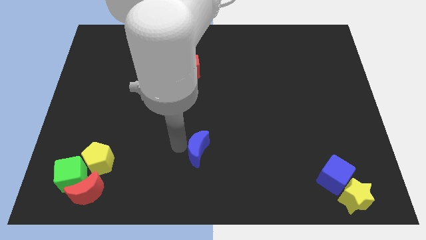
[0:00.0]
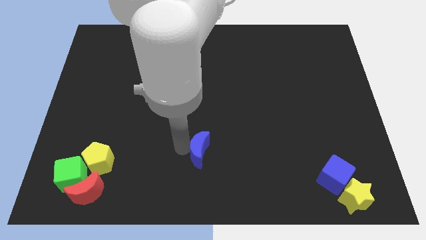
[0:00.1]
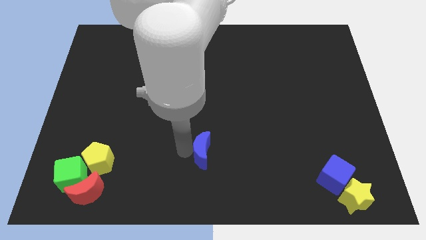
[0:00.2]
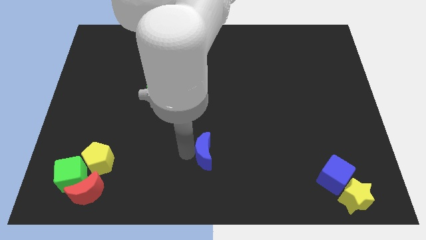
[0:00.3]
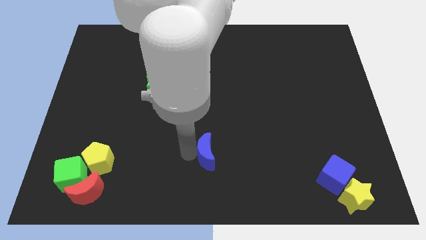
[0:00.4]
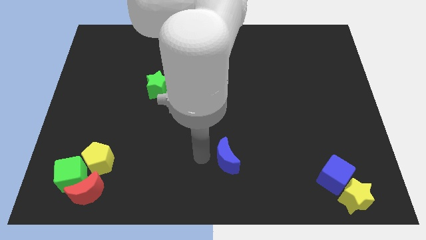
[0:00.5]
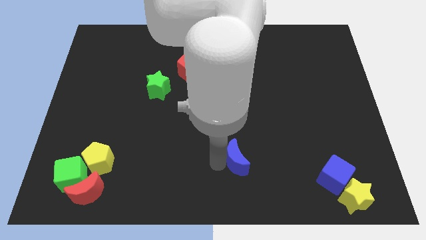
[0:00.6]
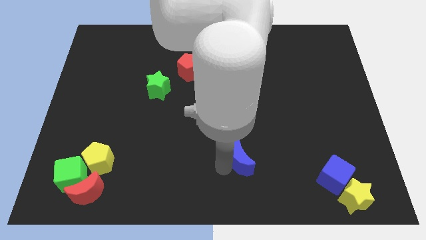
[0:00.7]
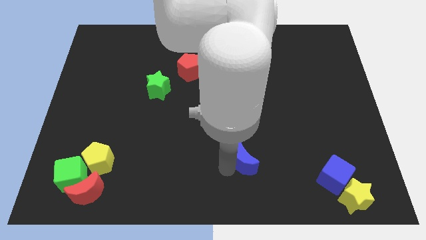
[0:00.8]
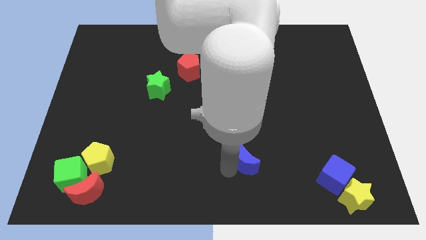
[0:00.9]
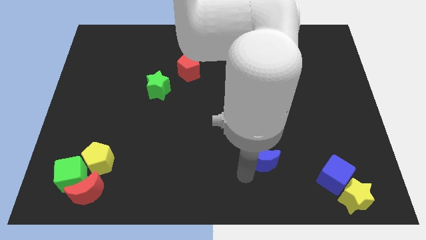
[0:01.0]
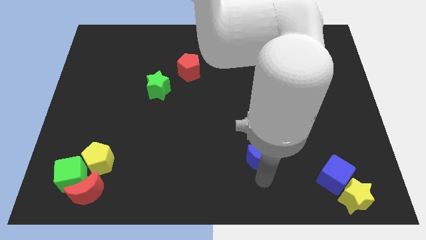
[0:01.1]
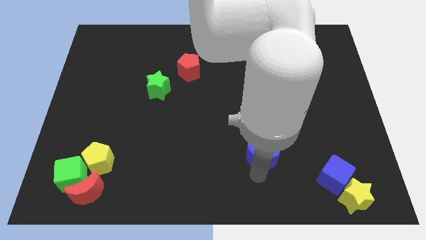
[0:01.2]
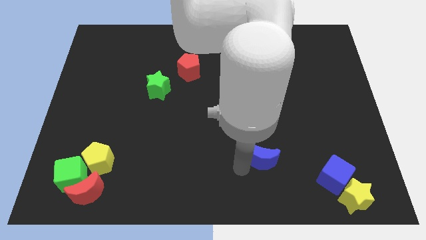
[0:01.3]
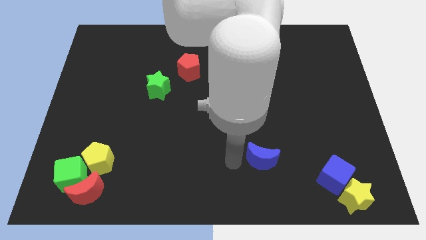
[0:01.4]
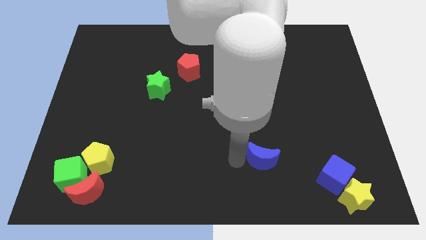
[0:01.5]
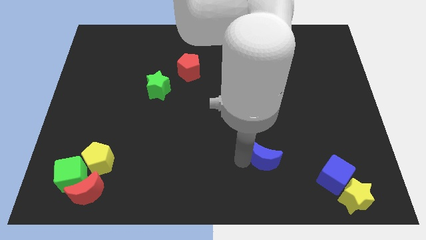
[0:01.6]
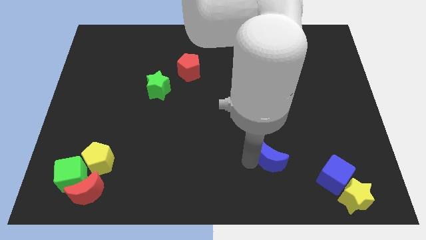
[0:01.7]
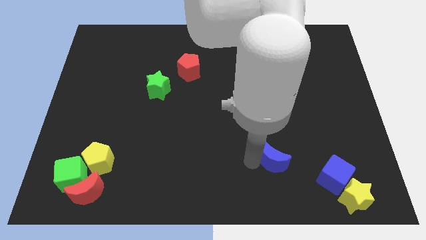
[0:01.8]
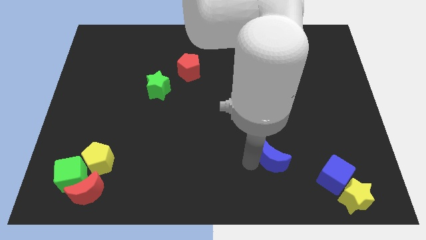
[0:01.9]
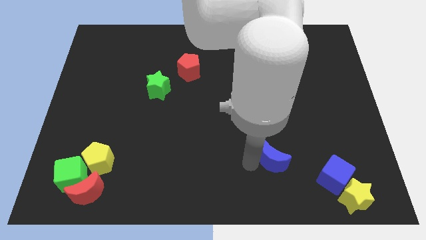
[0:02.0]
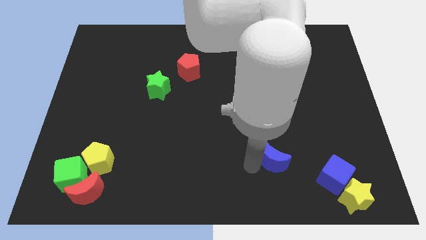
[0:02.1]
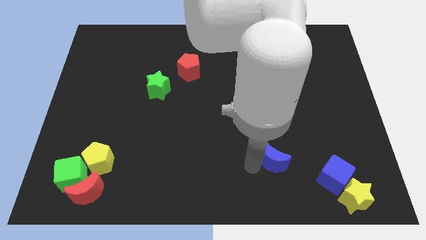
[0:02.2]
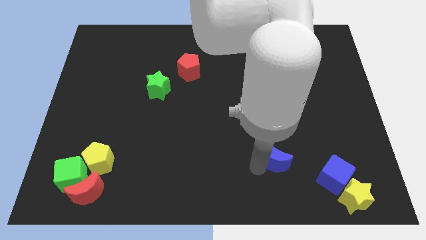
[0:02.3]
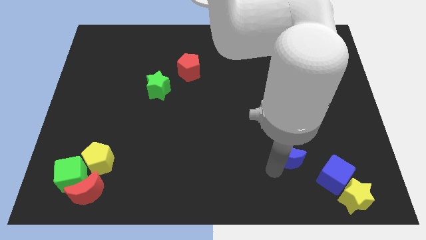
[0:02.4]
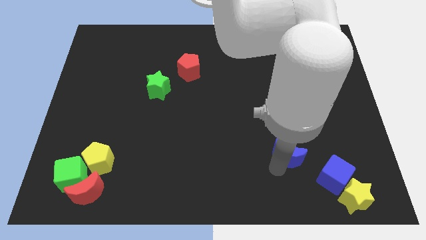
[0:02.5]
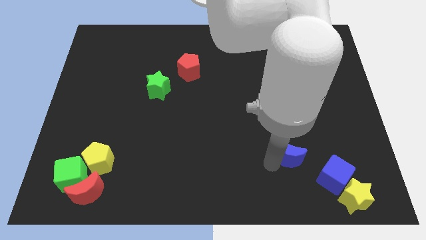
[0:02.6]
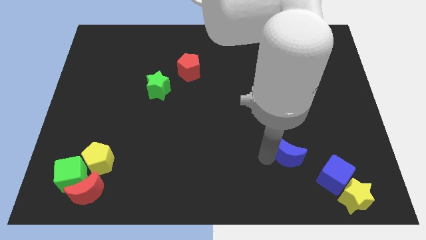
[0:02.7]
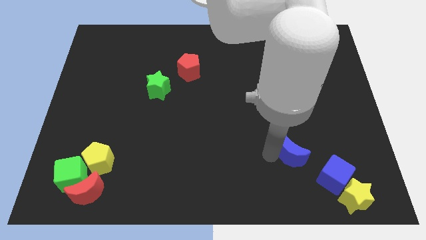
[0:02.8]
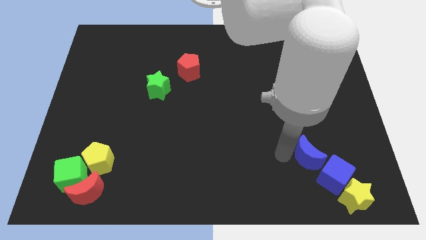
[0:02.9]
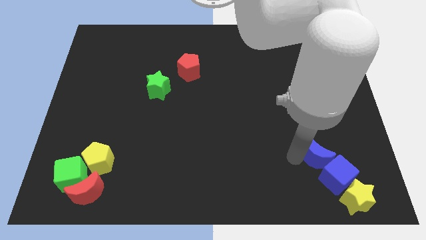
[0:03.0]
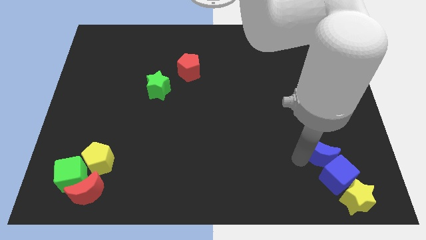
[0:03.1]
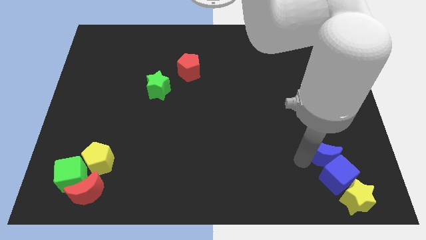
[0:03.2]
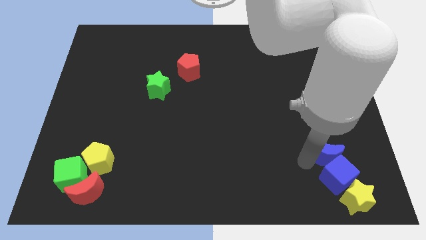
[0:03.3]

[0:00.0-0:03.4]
push blue moon in to blue cube

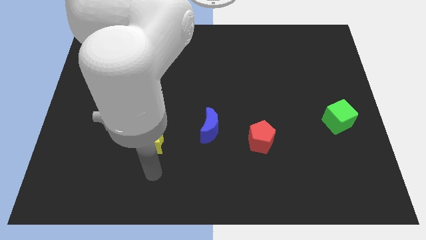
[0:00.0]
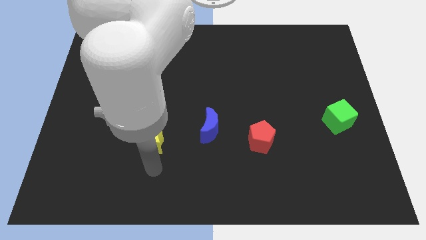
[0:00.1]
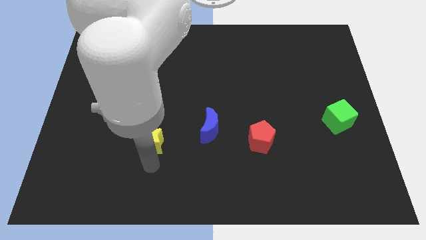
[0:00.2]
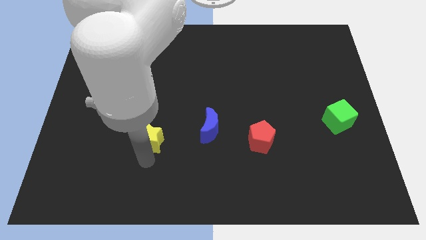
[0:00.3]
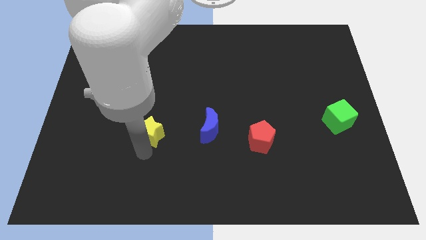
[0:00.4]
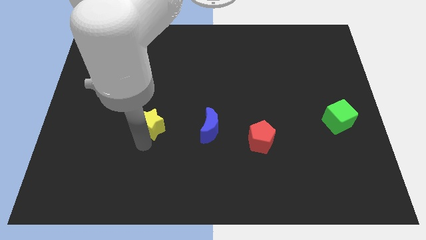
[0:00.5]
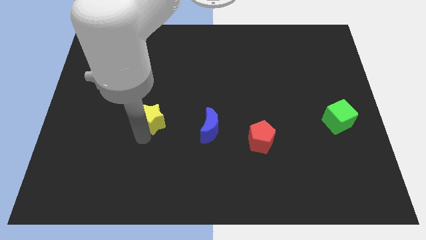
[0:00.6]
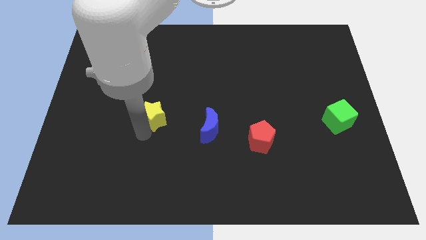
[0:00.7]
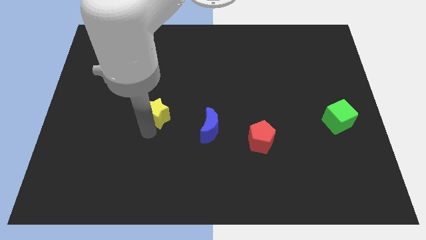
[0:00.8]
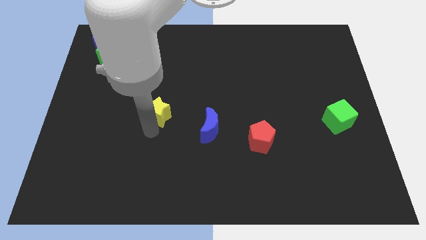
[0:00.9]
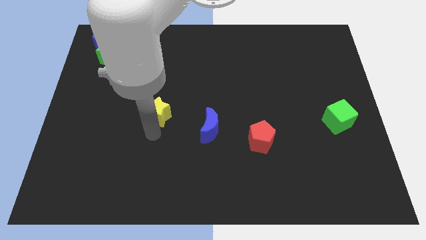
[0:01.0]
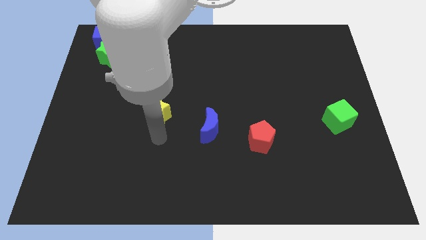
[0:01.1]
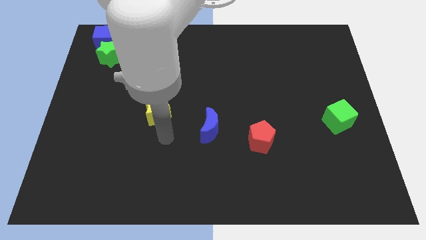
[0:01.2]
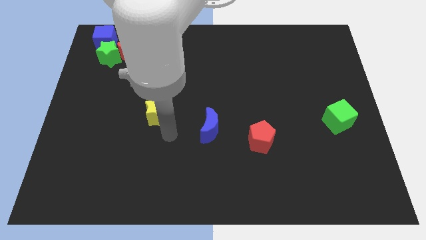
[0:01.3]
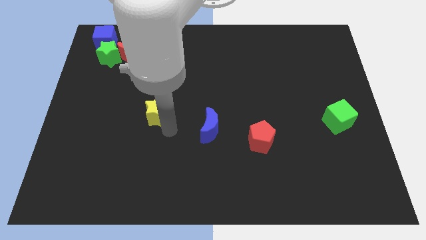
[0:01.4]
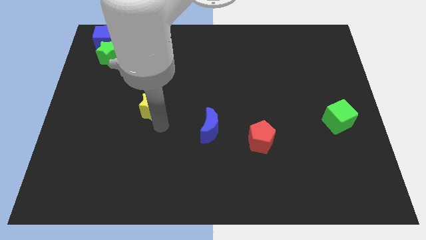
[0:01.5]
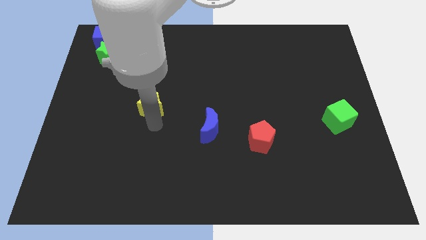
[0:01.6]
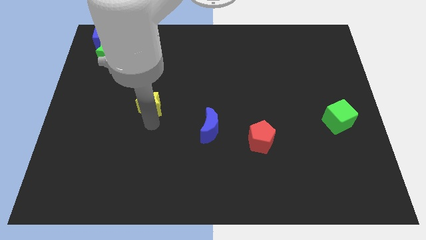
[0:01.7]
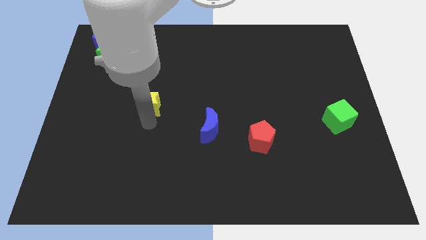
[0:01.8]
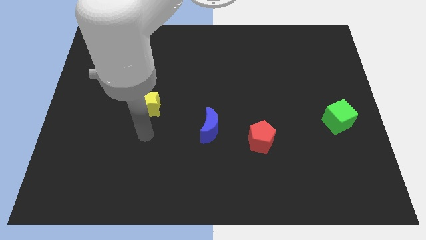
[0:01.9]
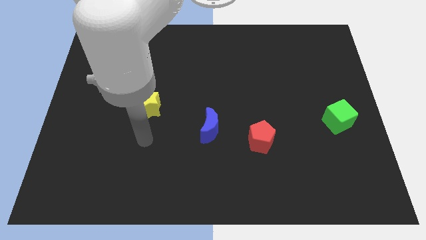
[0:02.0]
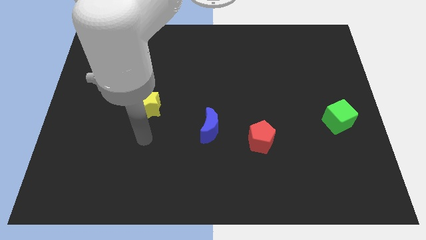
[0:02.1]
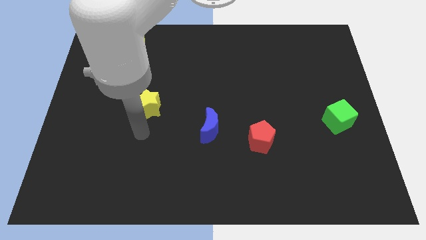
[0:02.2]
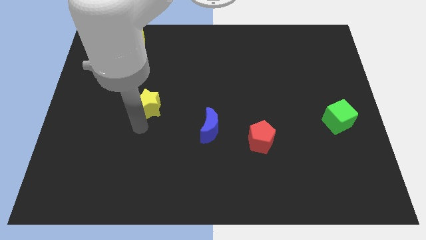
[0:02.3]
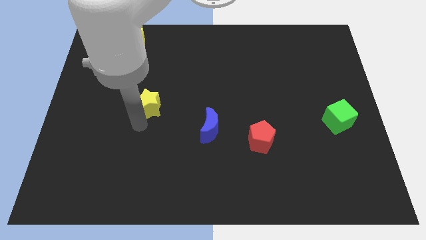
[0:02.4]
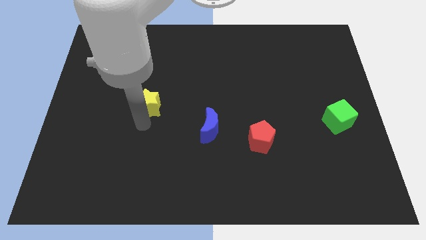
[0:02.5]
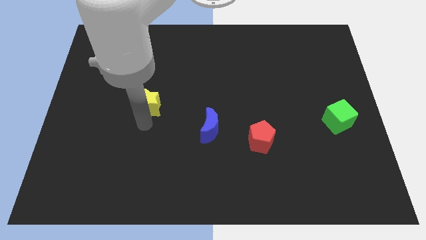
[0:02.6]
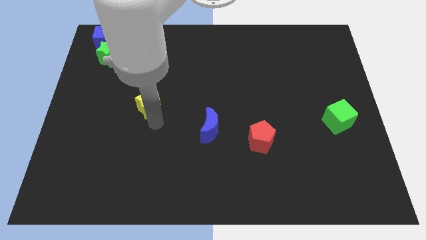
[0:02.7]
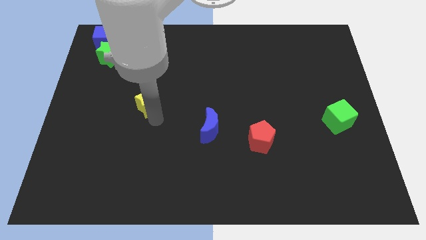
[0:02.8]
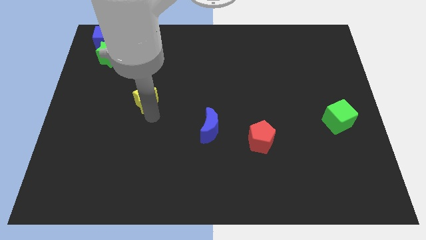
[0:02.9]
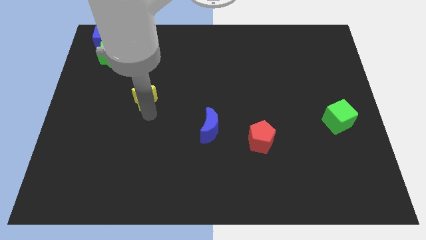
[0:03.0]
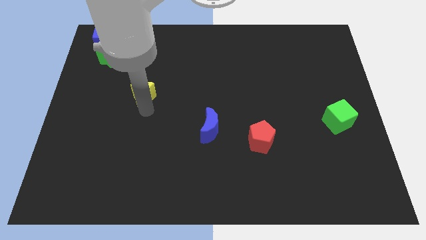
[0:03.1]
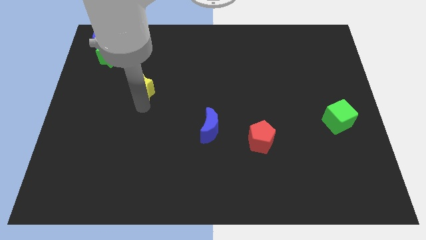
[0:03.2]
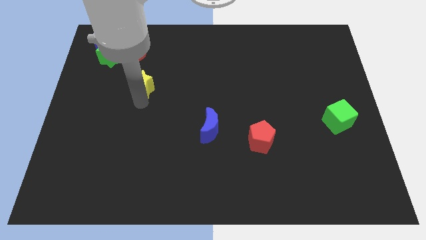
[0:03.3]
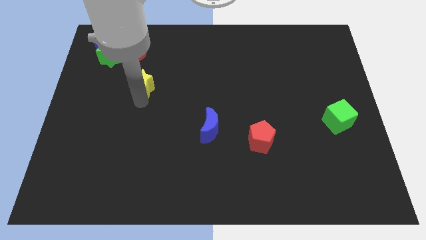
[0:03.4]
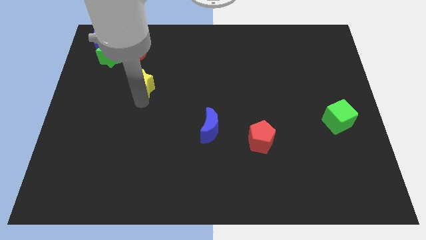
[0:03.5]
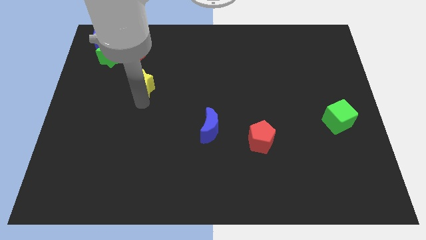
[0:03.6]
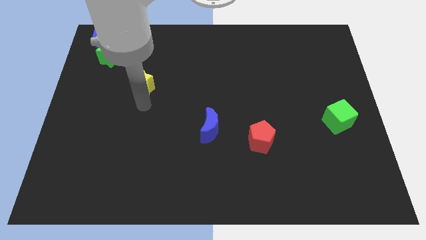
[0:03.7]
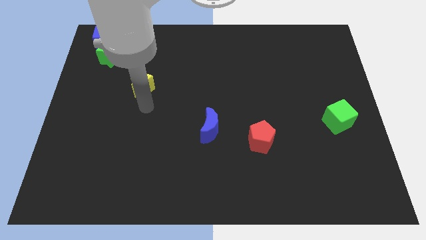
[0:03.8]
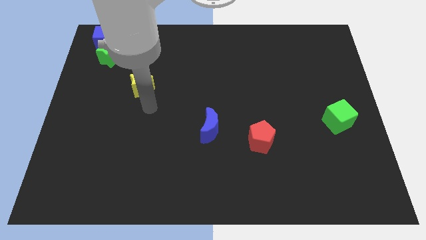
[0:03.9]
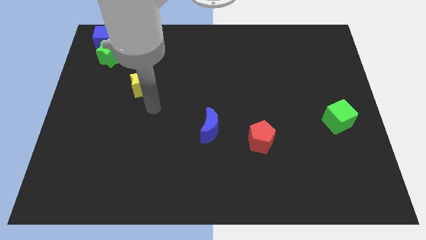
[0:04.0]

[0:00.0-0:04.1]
slide the yellow star towards the top

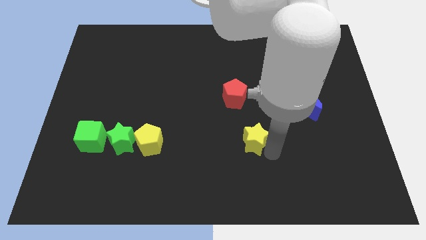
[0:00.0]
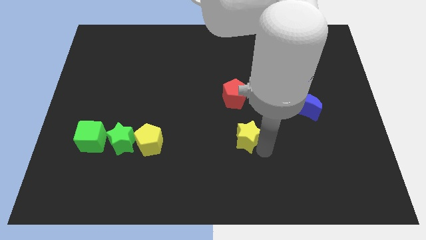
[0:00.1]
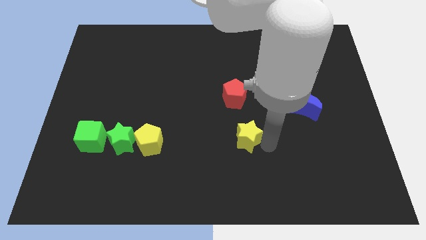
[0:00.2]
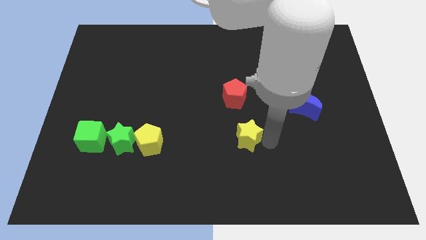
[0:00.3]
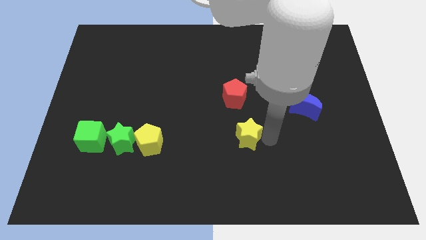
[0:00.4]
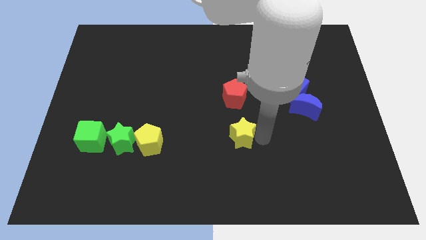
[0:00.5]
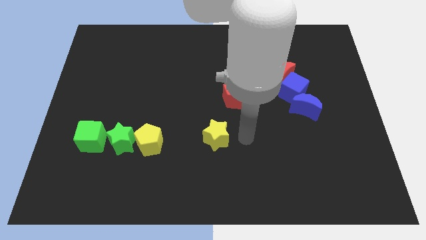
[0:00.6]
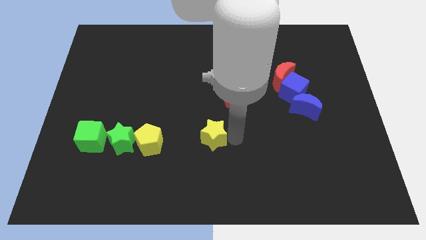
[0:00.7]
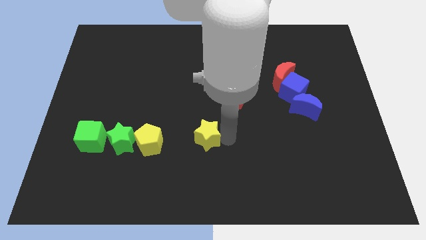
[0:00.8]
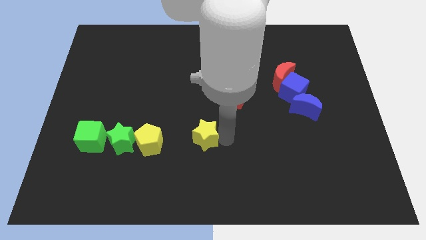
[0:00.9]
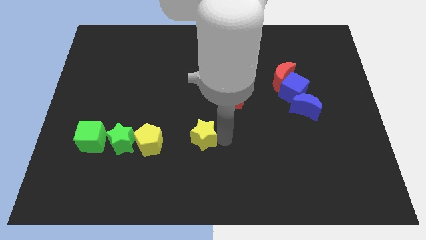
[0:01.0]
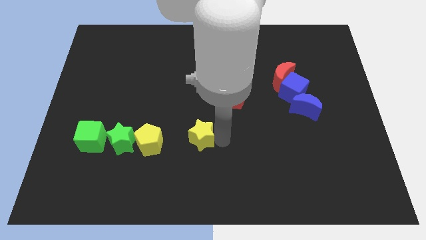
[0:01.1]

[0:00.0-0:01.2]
move the yellow star to the right of the yellow pentagon
